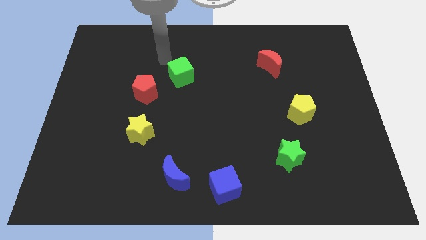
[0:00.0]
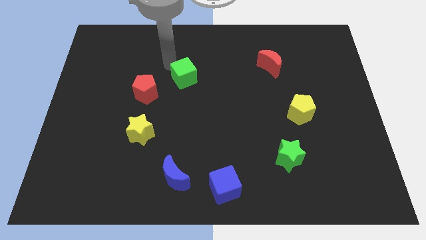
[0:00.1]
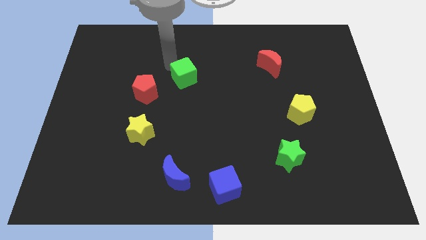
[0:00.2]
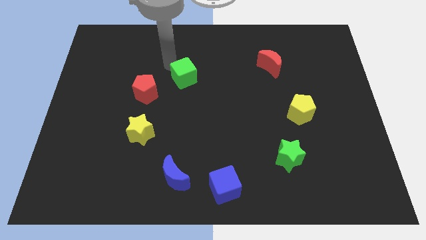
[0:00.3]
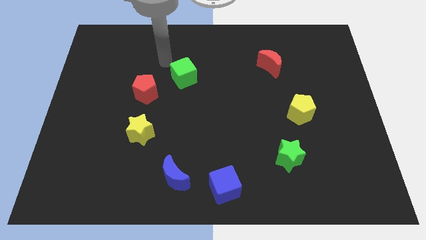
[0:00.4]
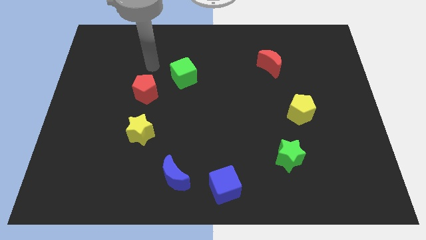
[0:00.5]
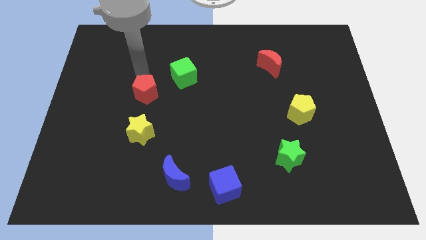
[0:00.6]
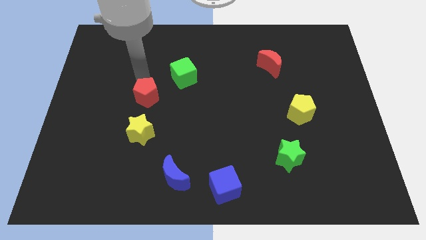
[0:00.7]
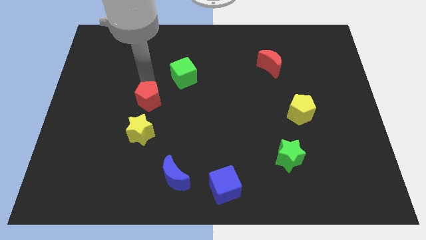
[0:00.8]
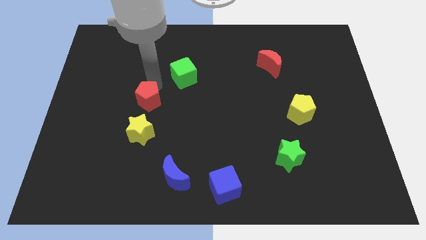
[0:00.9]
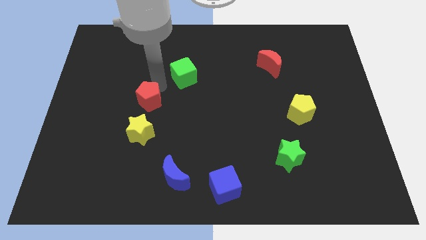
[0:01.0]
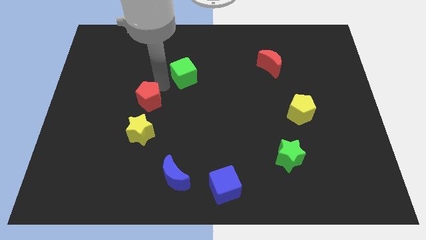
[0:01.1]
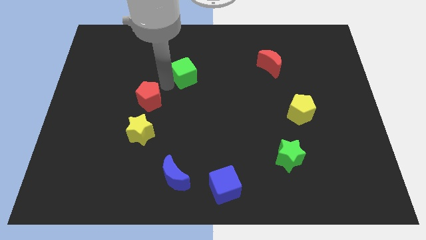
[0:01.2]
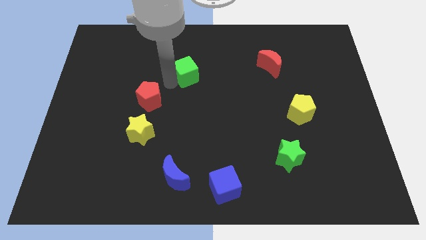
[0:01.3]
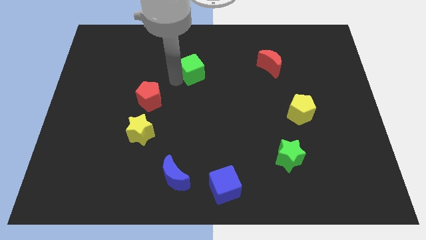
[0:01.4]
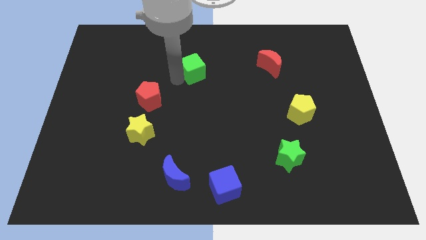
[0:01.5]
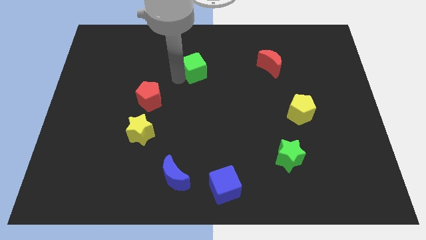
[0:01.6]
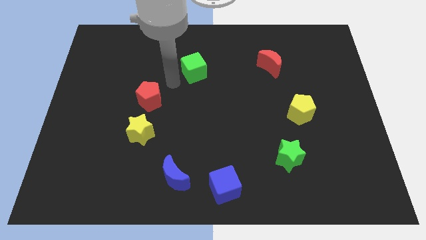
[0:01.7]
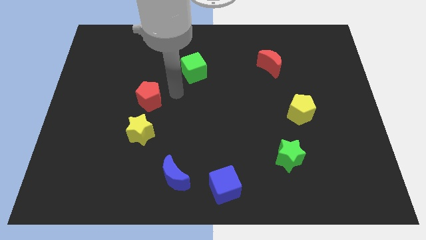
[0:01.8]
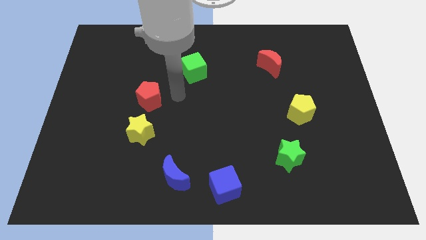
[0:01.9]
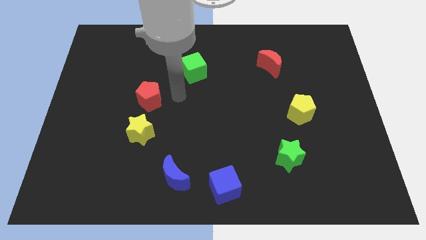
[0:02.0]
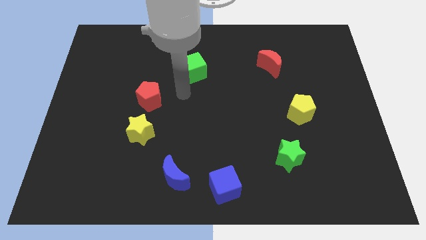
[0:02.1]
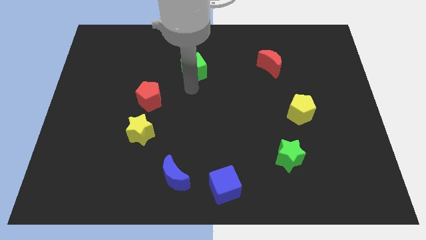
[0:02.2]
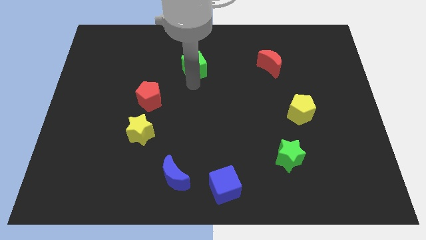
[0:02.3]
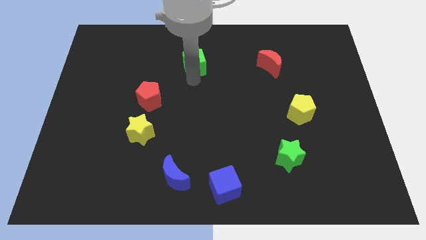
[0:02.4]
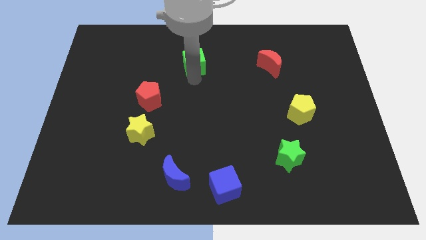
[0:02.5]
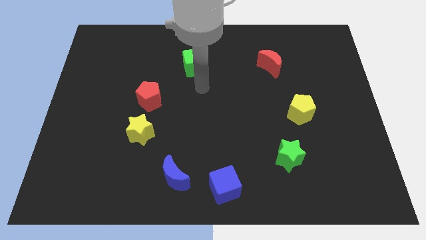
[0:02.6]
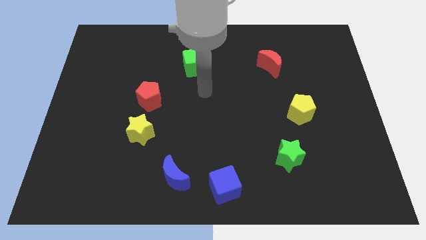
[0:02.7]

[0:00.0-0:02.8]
move the green cube towards top center of the board

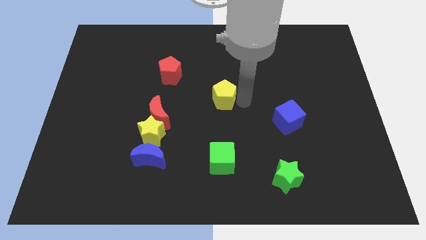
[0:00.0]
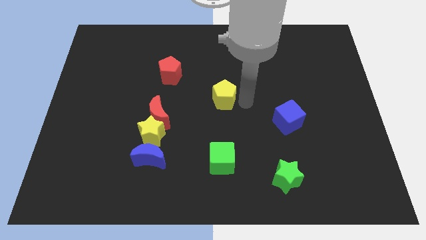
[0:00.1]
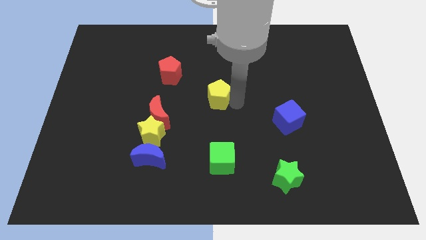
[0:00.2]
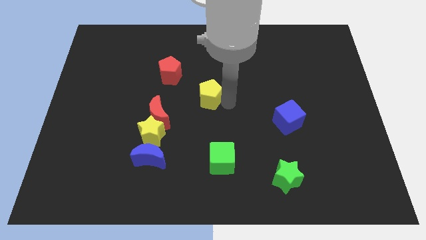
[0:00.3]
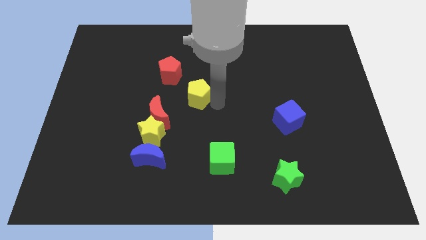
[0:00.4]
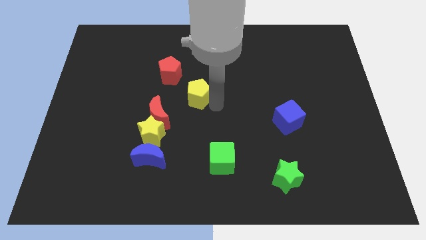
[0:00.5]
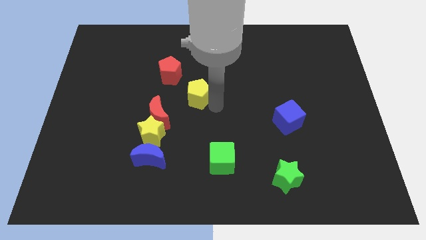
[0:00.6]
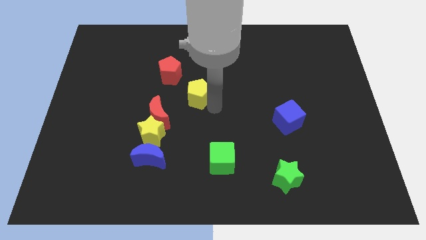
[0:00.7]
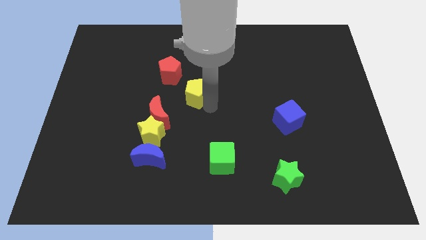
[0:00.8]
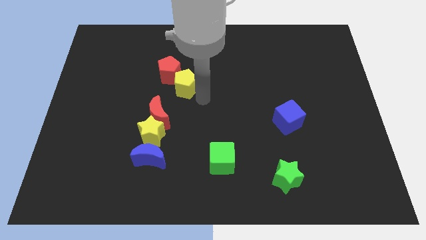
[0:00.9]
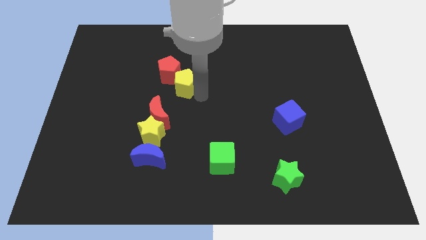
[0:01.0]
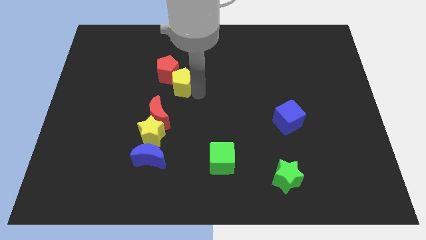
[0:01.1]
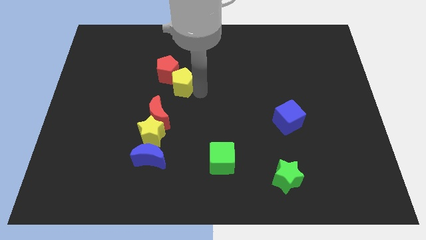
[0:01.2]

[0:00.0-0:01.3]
place the yellow pentagon at the bottom right side of red pentagon

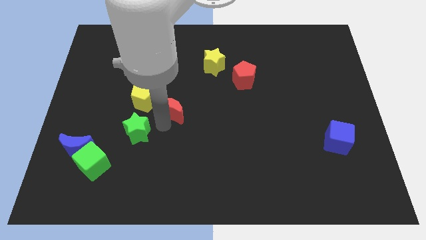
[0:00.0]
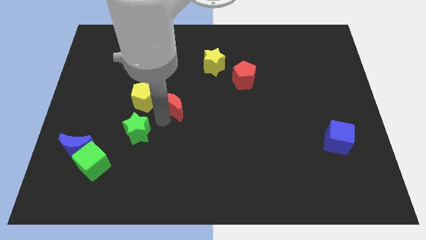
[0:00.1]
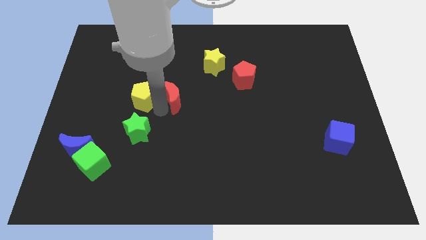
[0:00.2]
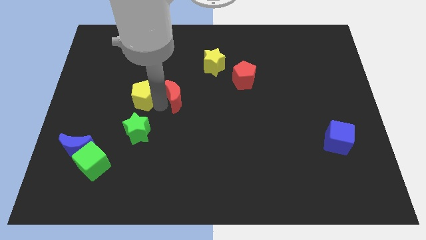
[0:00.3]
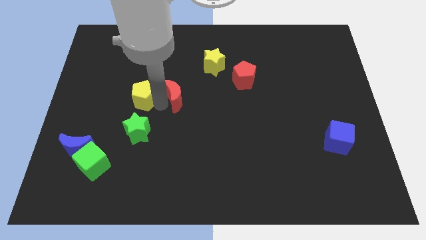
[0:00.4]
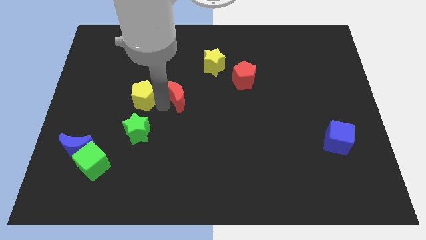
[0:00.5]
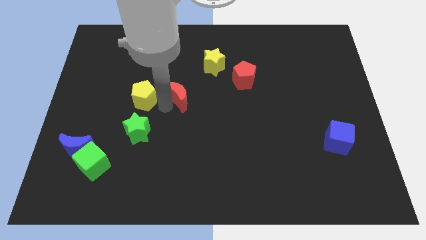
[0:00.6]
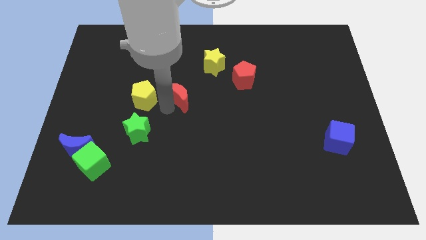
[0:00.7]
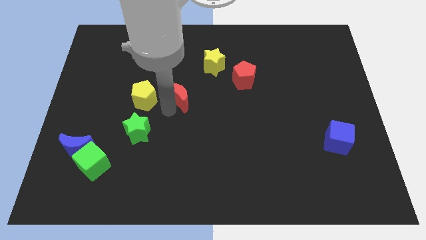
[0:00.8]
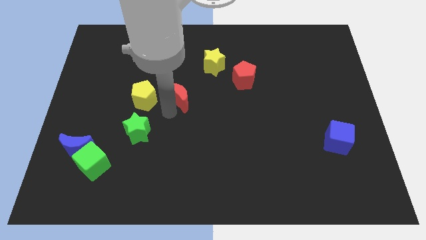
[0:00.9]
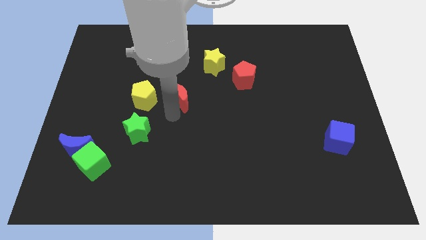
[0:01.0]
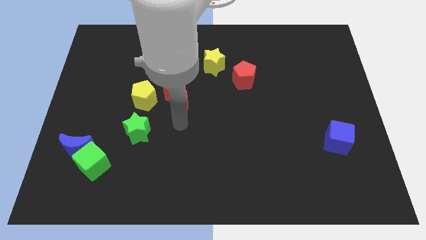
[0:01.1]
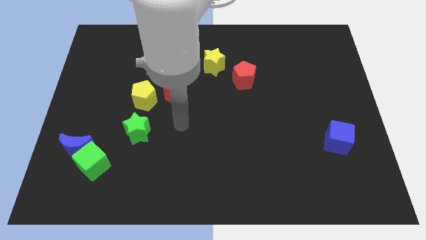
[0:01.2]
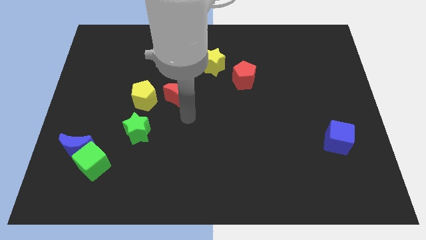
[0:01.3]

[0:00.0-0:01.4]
place the red moon diagonally to yellow star

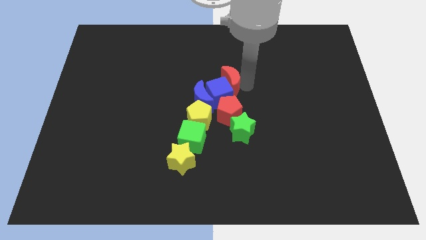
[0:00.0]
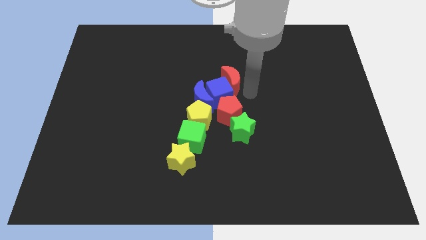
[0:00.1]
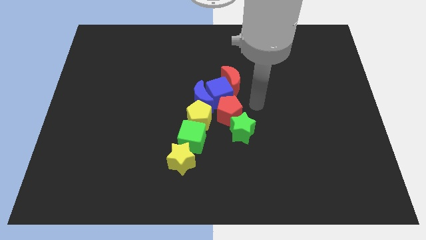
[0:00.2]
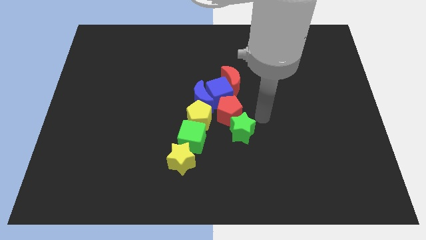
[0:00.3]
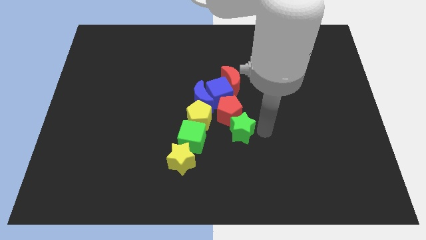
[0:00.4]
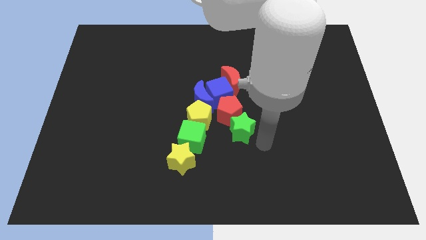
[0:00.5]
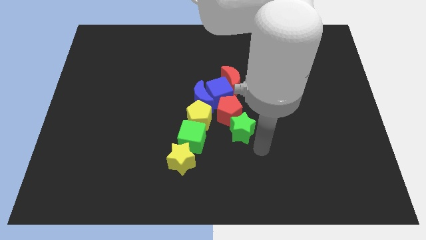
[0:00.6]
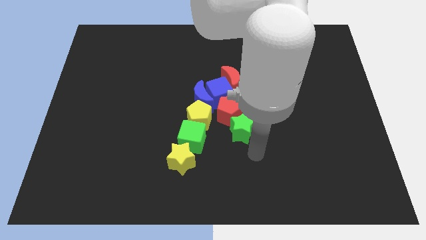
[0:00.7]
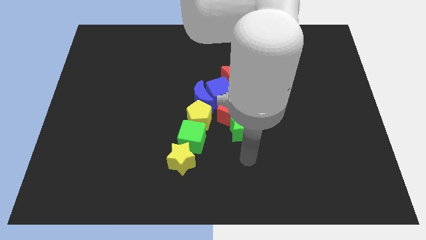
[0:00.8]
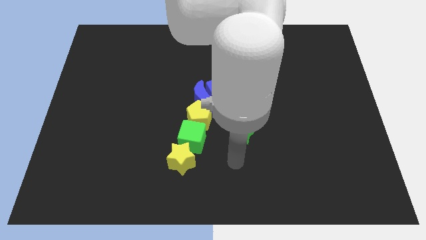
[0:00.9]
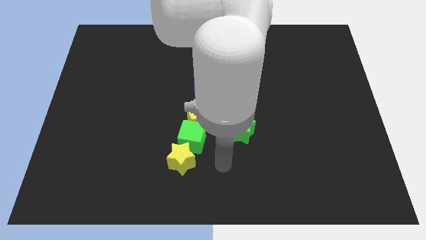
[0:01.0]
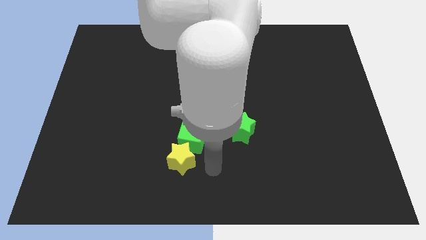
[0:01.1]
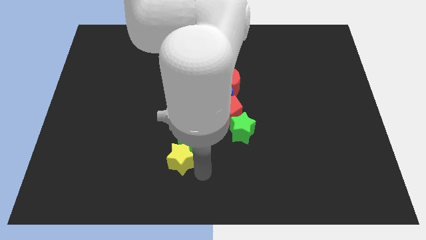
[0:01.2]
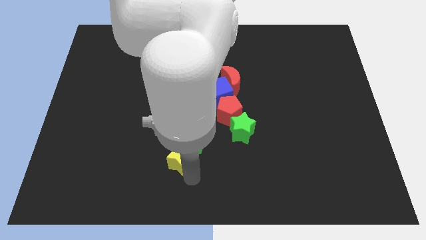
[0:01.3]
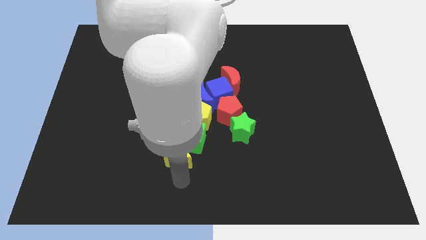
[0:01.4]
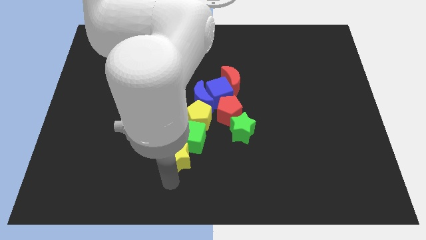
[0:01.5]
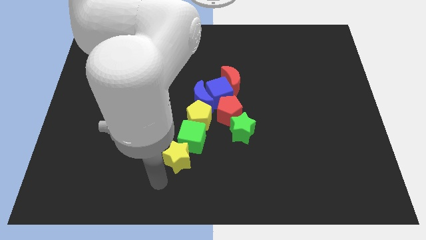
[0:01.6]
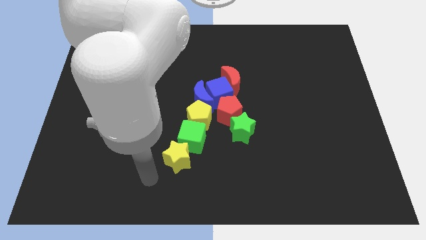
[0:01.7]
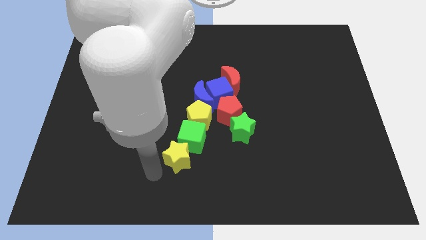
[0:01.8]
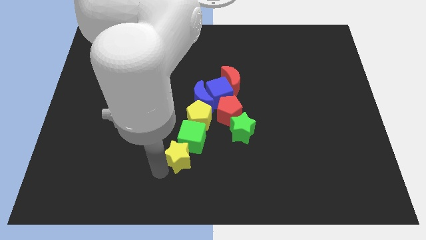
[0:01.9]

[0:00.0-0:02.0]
move your hand to the bottom left of the yellow star

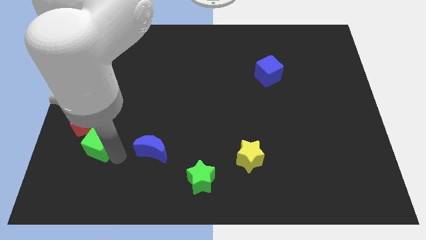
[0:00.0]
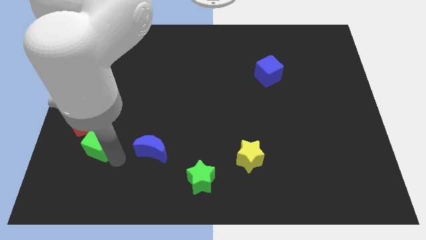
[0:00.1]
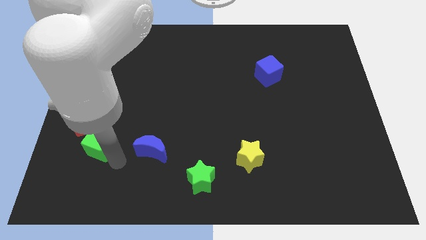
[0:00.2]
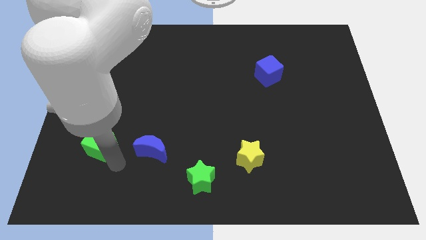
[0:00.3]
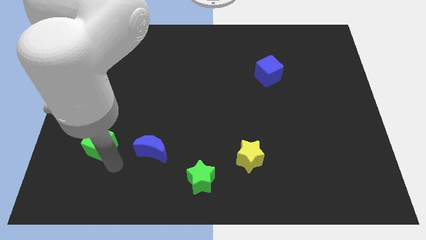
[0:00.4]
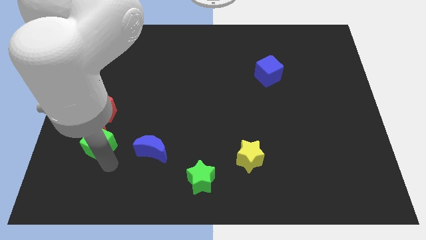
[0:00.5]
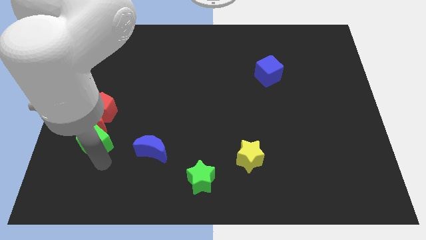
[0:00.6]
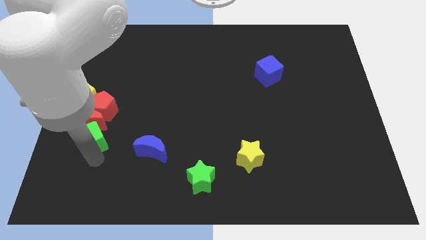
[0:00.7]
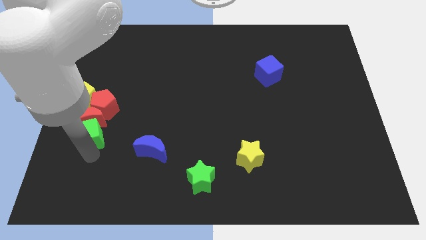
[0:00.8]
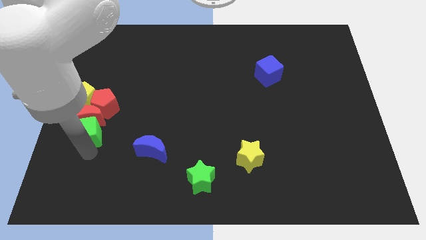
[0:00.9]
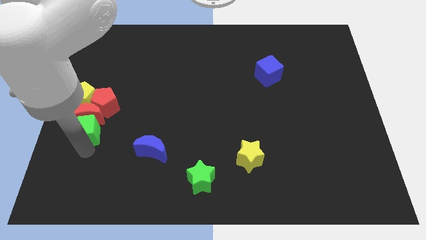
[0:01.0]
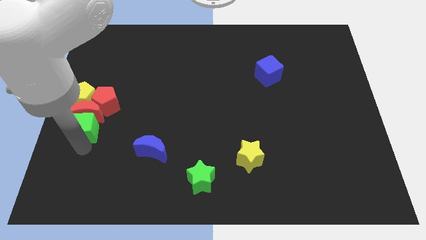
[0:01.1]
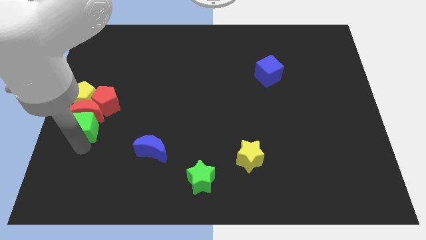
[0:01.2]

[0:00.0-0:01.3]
push the green cube into the red crescent

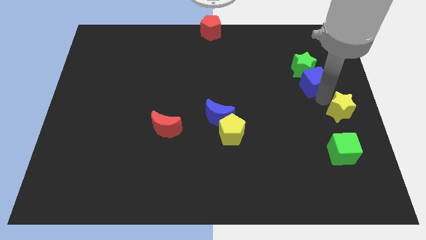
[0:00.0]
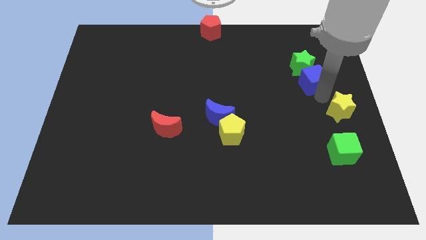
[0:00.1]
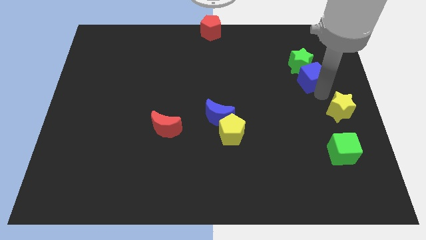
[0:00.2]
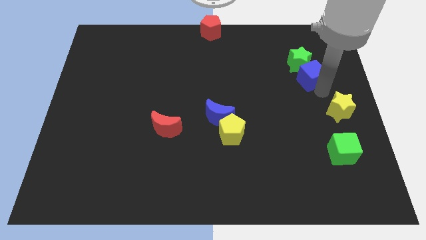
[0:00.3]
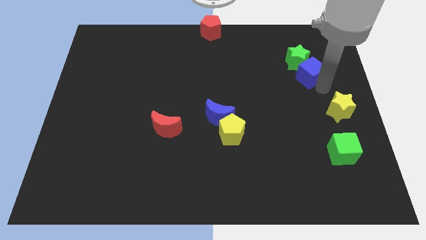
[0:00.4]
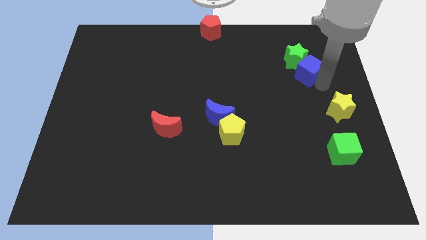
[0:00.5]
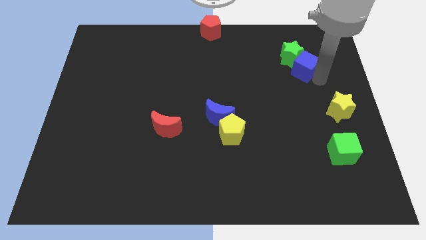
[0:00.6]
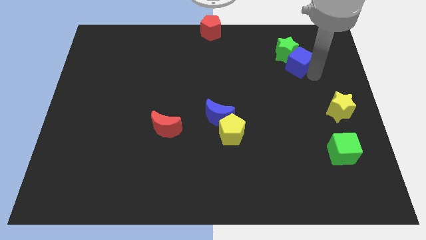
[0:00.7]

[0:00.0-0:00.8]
move the blue cube along with the green star slightly to the right top
